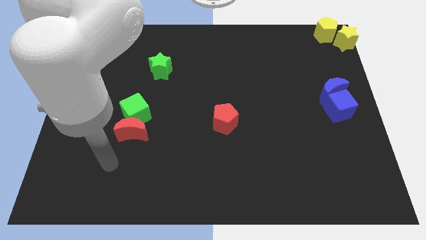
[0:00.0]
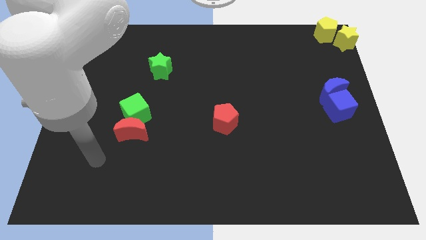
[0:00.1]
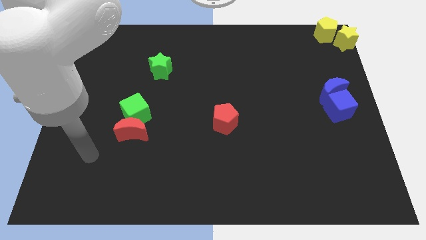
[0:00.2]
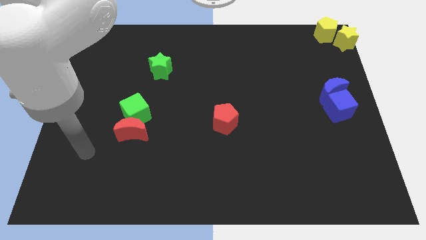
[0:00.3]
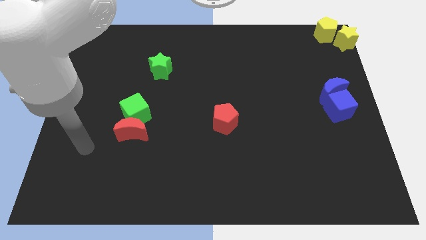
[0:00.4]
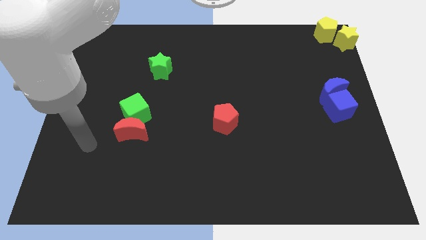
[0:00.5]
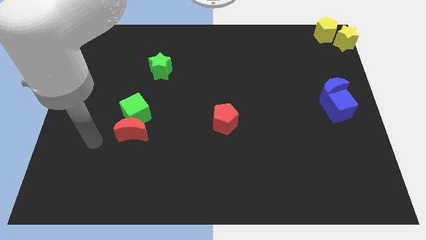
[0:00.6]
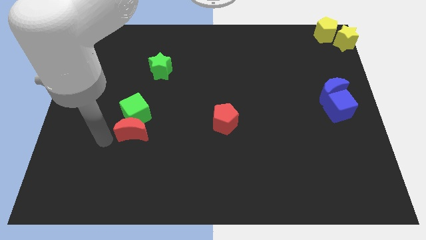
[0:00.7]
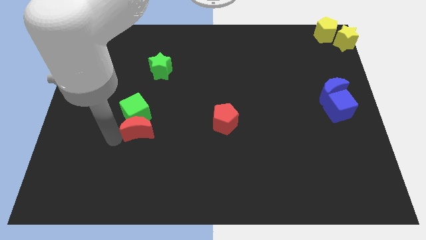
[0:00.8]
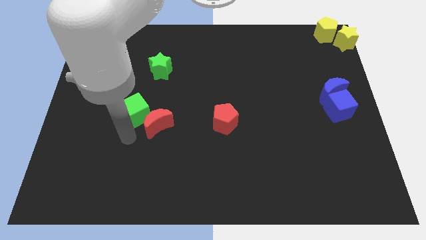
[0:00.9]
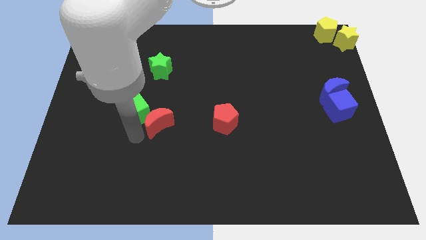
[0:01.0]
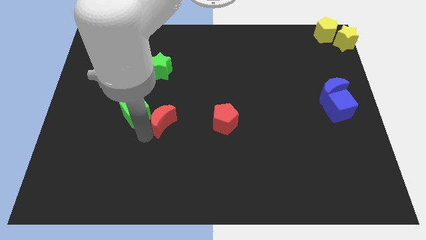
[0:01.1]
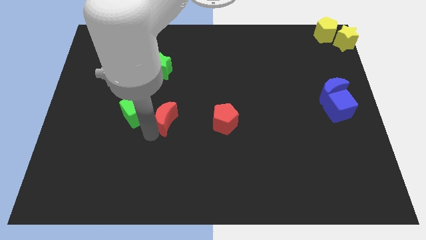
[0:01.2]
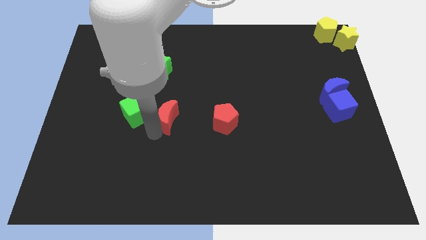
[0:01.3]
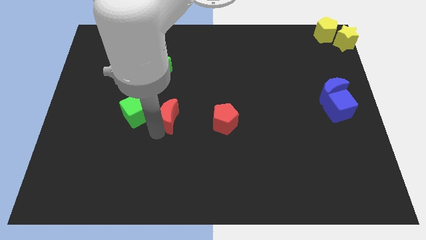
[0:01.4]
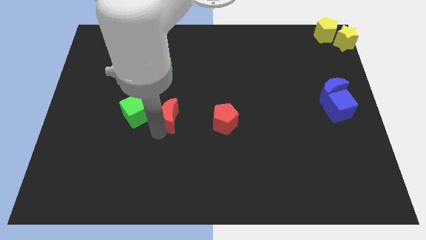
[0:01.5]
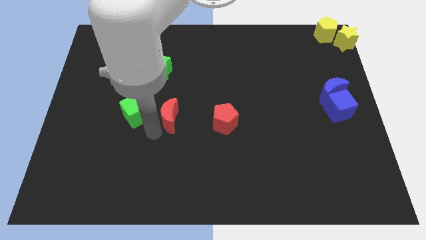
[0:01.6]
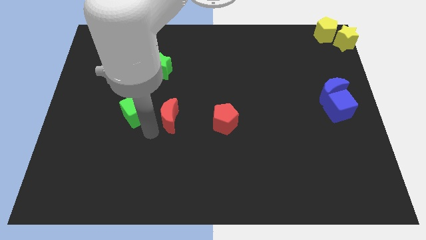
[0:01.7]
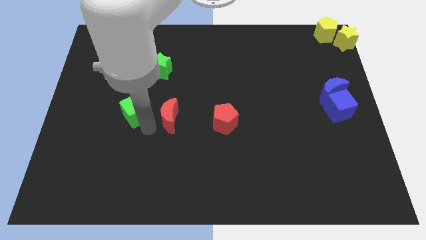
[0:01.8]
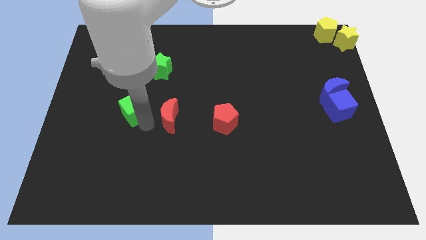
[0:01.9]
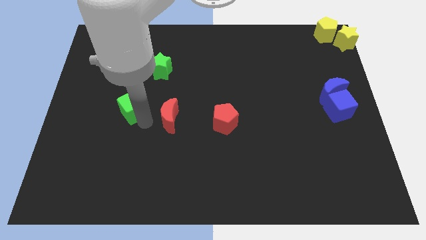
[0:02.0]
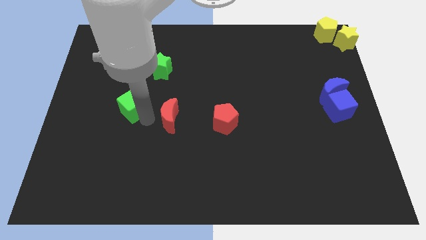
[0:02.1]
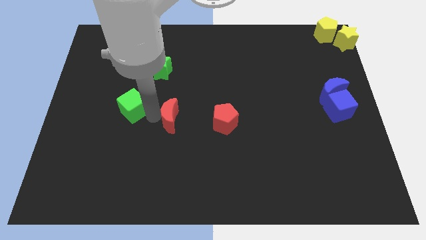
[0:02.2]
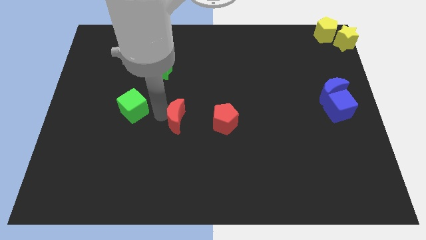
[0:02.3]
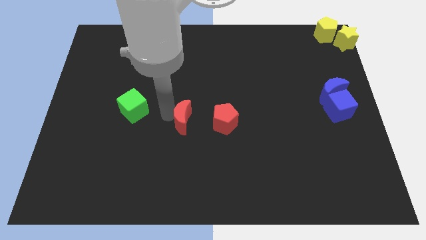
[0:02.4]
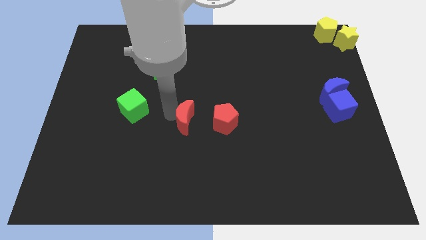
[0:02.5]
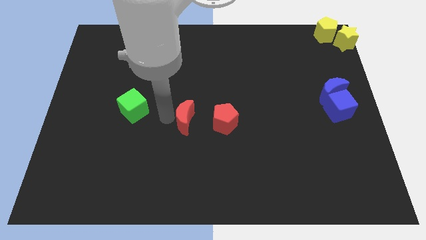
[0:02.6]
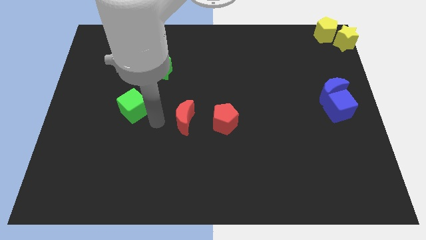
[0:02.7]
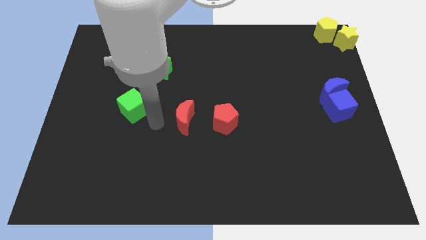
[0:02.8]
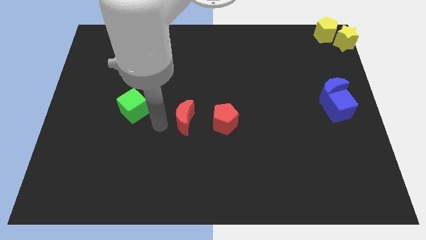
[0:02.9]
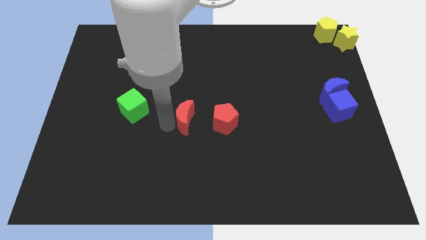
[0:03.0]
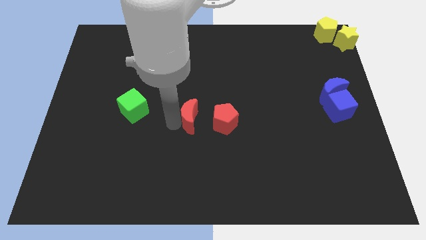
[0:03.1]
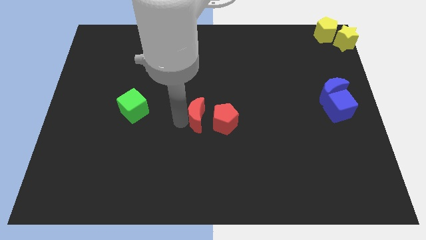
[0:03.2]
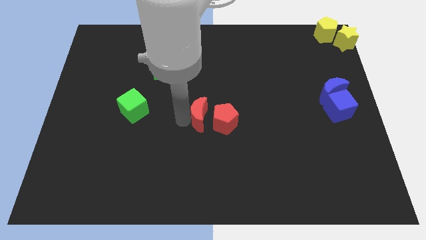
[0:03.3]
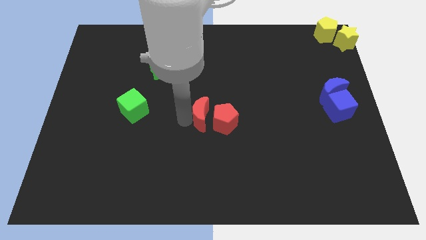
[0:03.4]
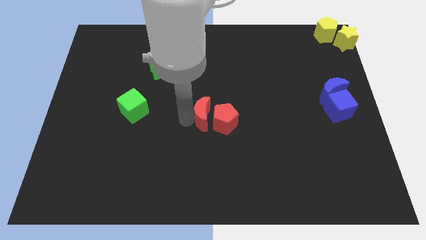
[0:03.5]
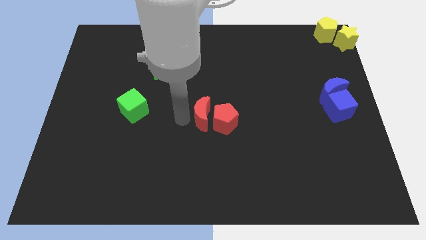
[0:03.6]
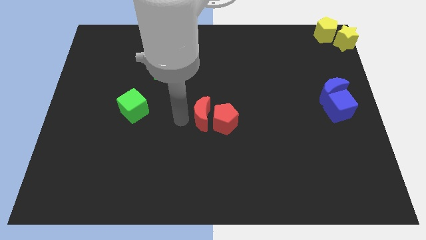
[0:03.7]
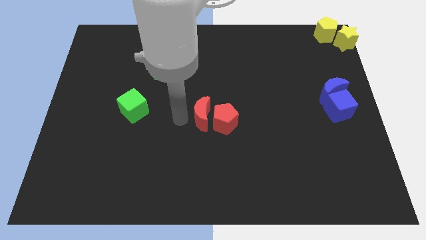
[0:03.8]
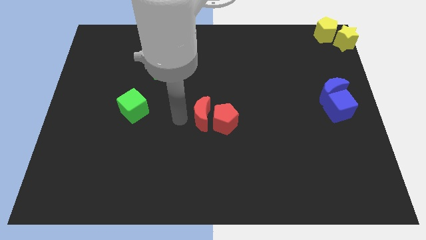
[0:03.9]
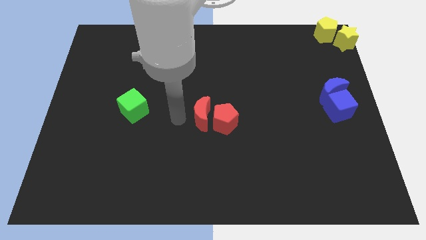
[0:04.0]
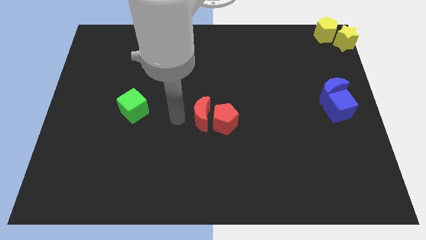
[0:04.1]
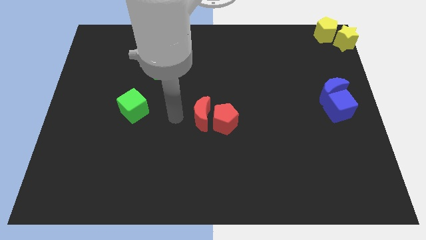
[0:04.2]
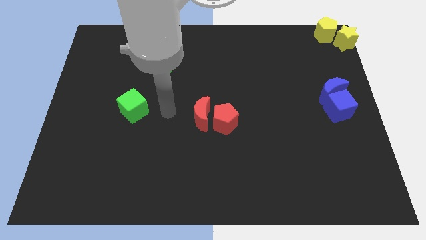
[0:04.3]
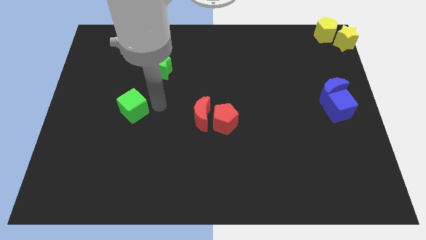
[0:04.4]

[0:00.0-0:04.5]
move the red moon beside the red pentagon

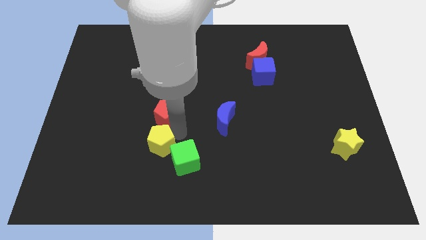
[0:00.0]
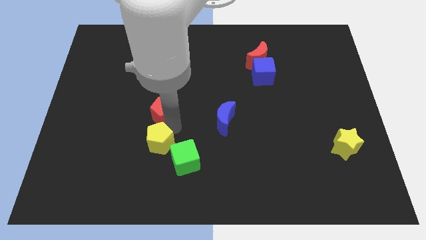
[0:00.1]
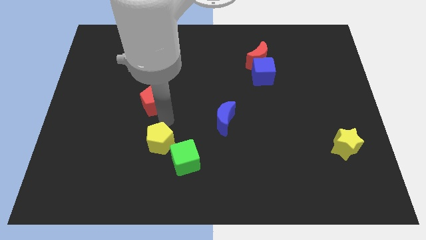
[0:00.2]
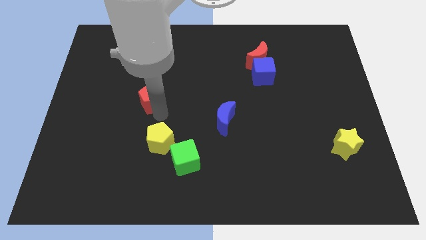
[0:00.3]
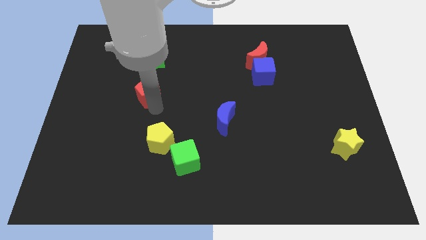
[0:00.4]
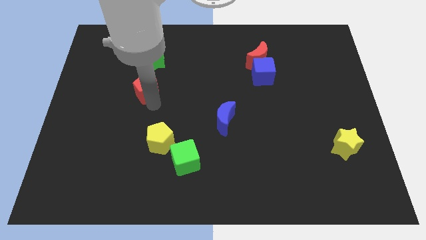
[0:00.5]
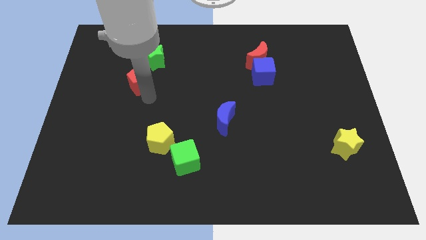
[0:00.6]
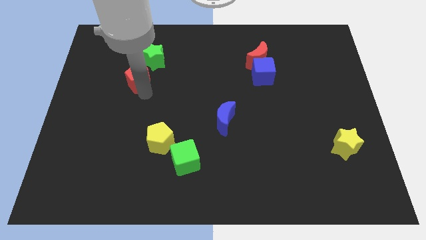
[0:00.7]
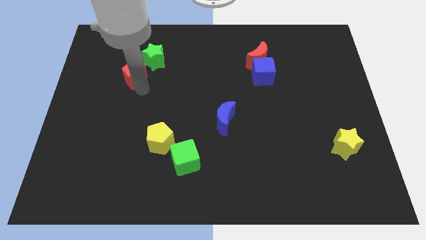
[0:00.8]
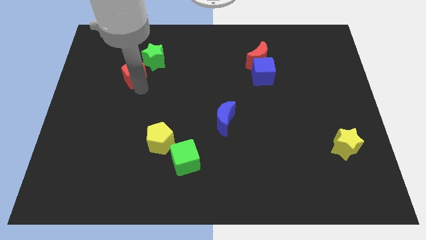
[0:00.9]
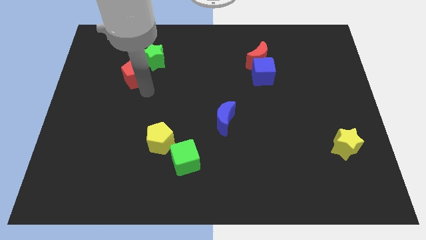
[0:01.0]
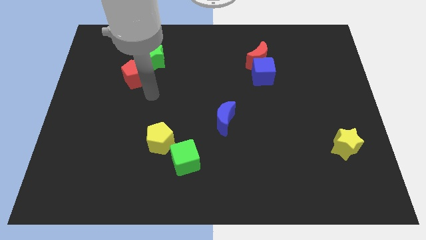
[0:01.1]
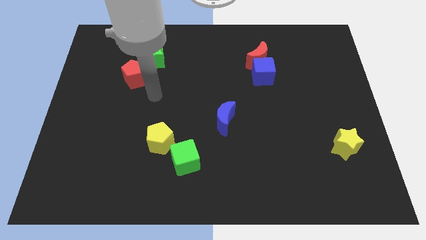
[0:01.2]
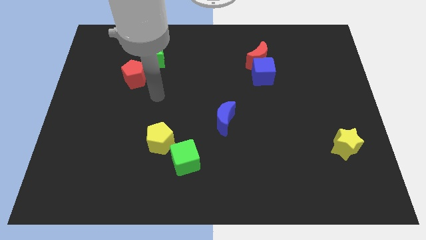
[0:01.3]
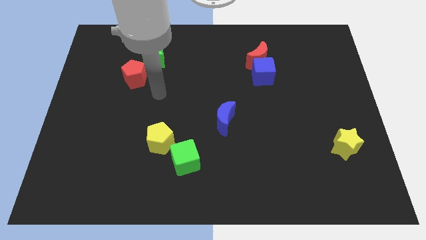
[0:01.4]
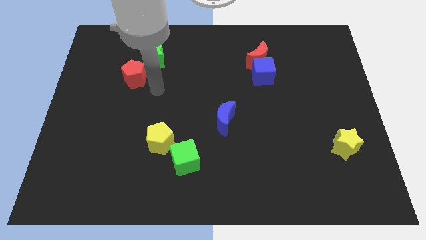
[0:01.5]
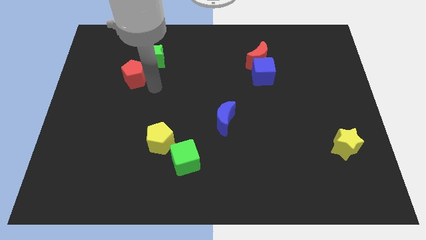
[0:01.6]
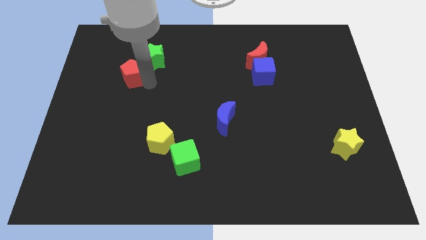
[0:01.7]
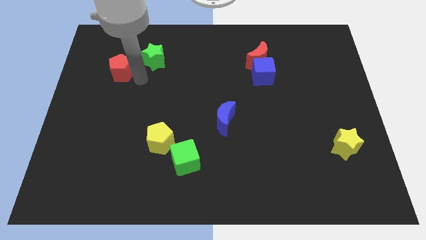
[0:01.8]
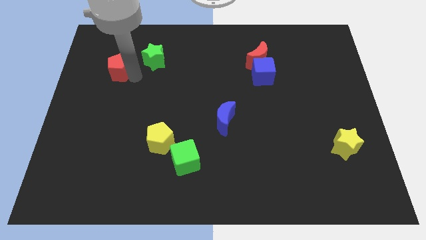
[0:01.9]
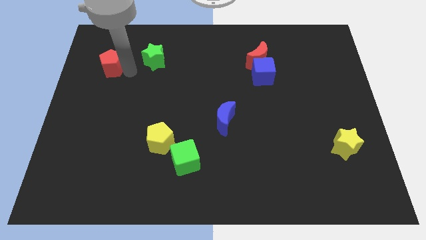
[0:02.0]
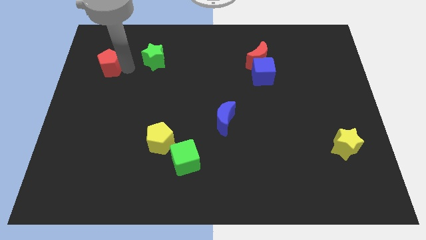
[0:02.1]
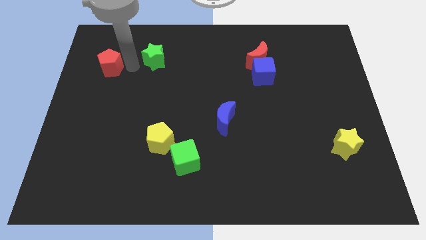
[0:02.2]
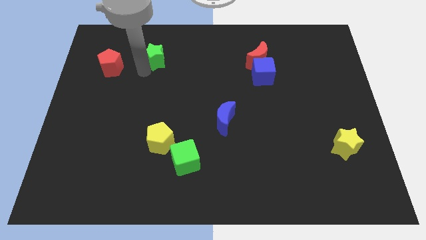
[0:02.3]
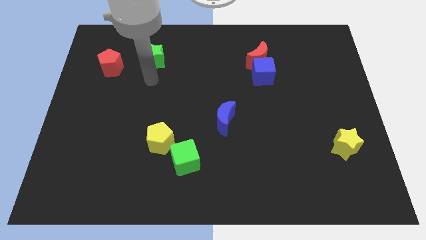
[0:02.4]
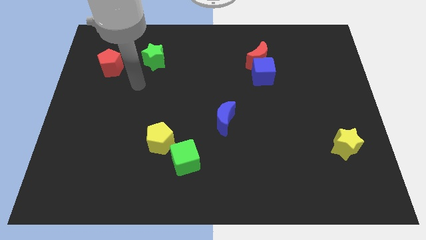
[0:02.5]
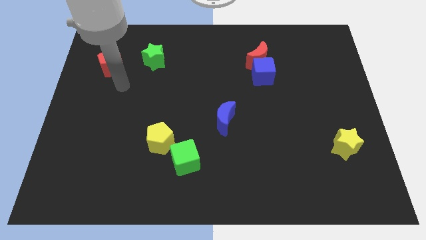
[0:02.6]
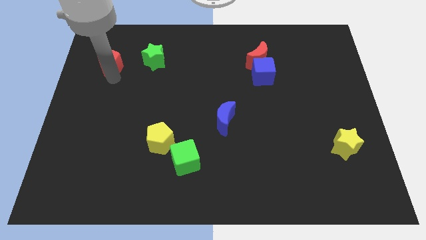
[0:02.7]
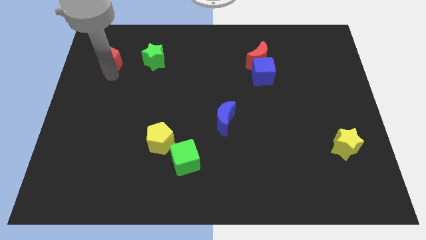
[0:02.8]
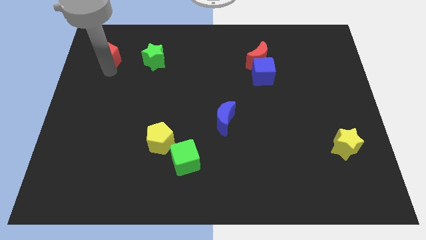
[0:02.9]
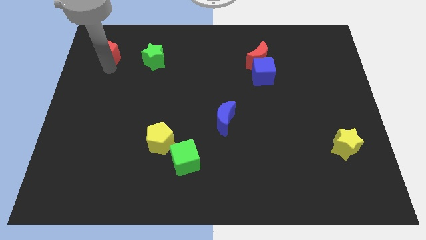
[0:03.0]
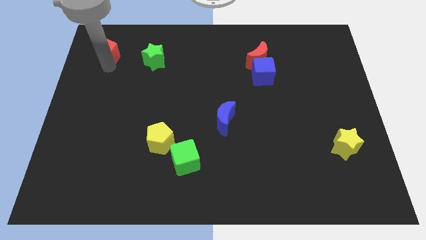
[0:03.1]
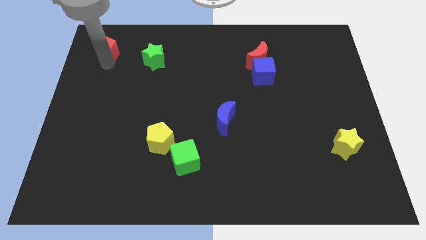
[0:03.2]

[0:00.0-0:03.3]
push the red pentagon to the left of the green star

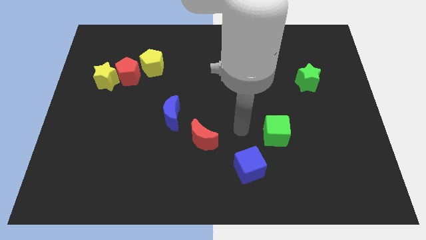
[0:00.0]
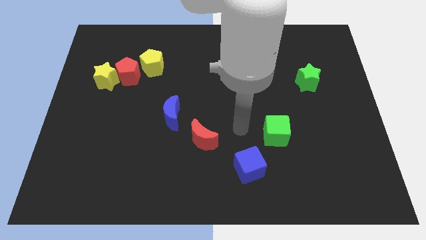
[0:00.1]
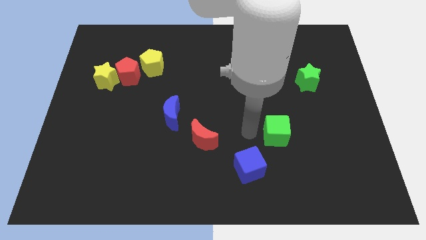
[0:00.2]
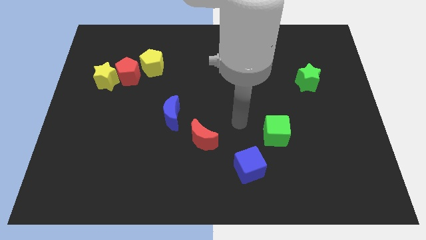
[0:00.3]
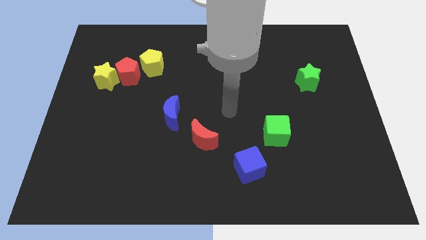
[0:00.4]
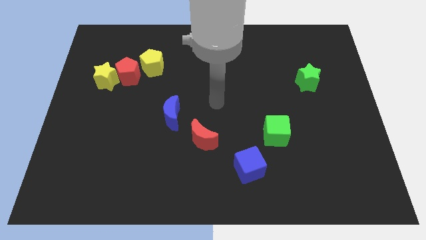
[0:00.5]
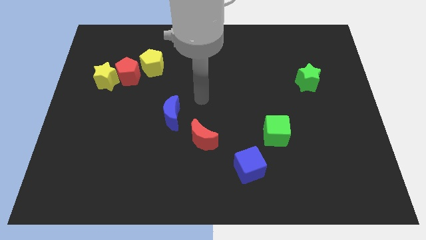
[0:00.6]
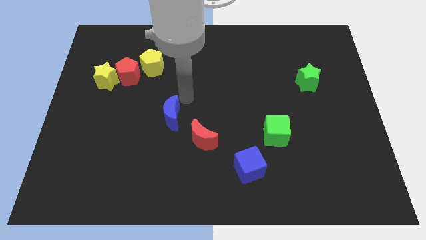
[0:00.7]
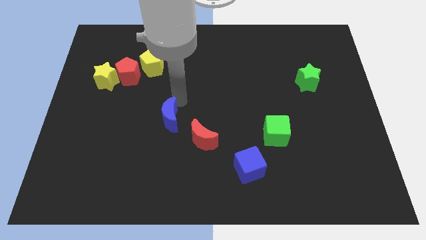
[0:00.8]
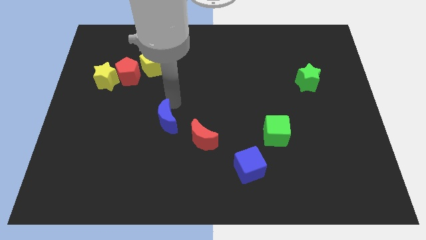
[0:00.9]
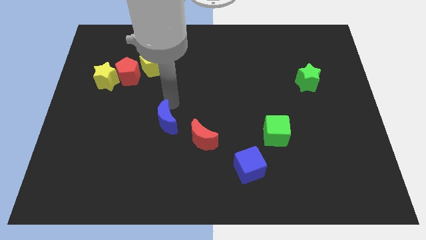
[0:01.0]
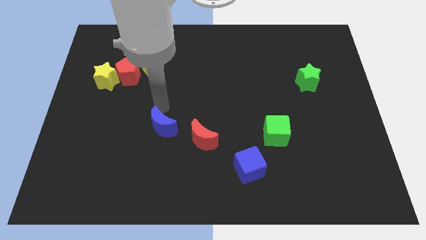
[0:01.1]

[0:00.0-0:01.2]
touch the blue moon
